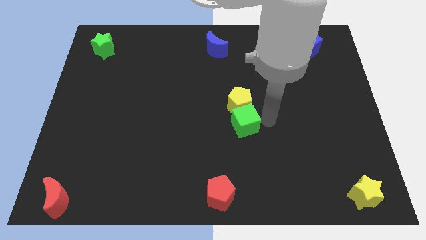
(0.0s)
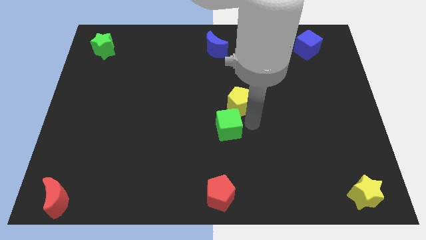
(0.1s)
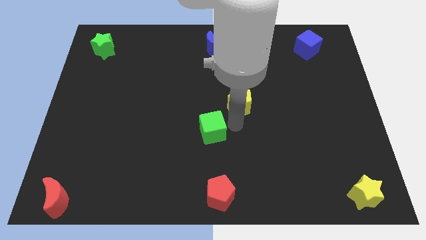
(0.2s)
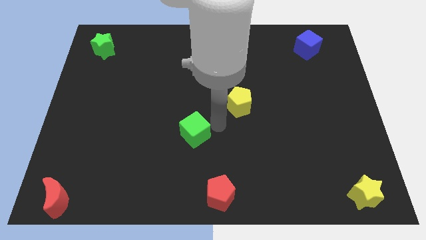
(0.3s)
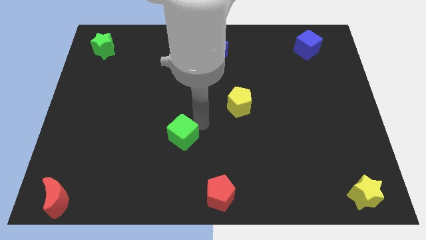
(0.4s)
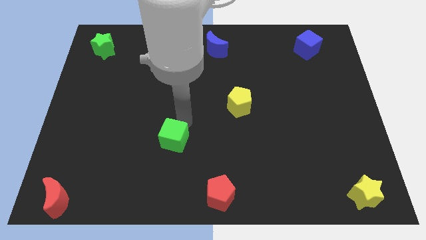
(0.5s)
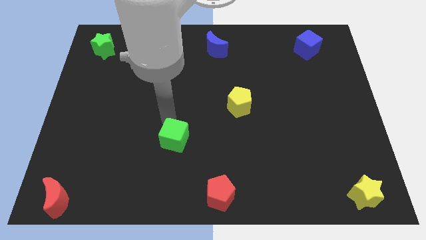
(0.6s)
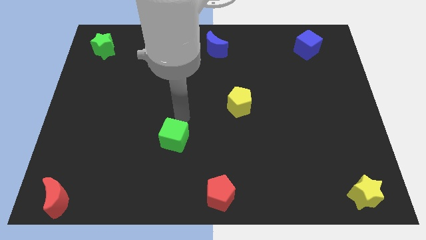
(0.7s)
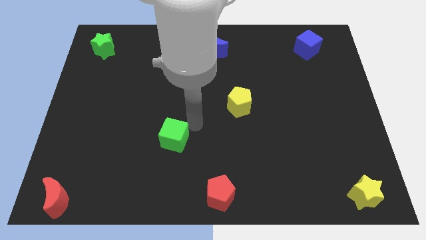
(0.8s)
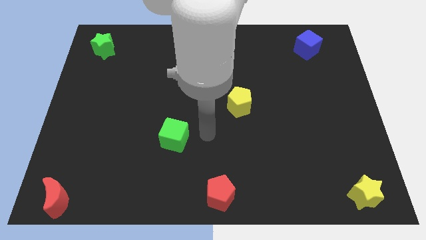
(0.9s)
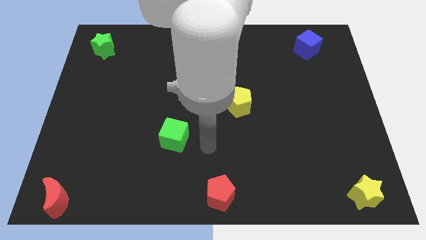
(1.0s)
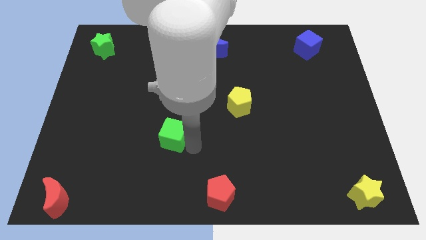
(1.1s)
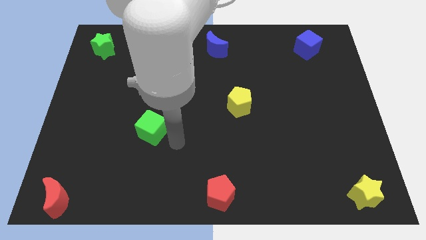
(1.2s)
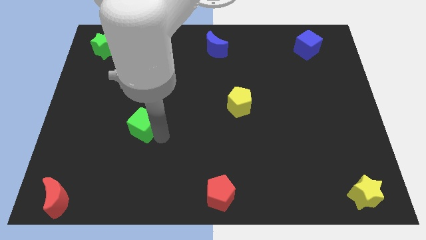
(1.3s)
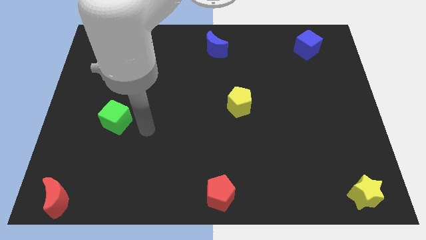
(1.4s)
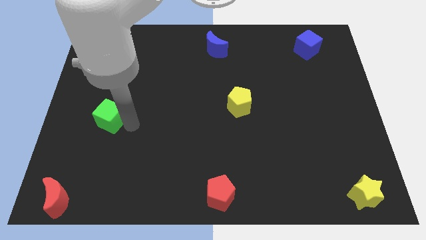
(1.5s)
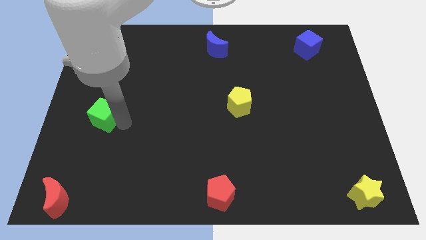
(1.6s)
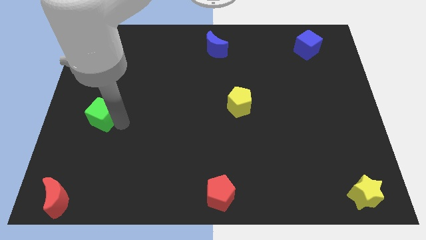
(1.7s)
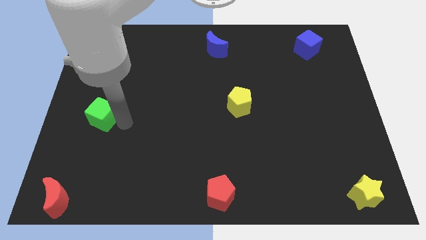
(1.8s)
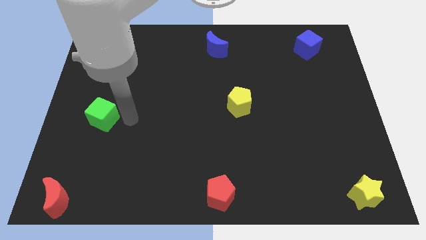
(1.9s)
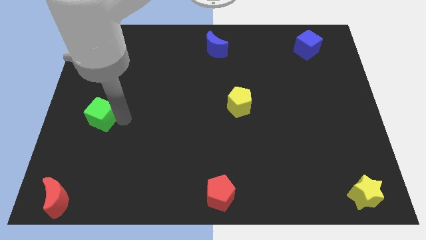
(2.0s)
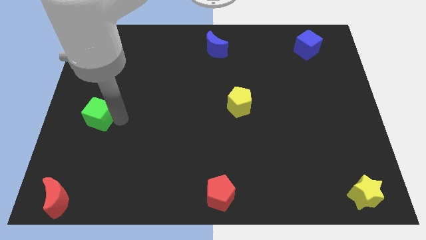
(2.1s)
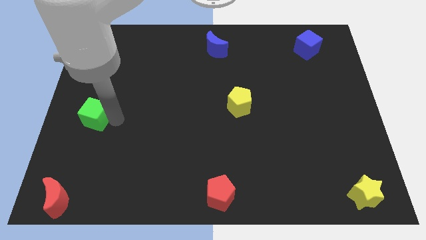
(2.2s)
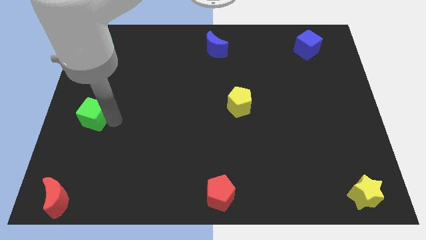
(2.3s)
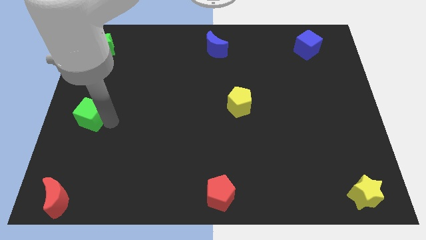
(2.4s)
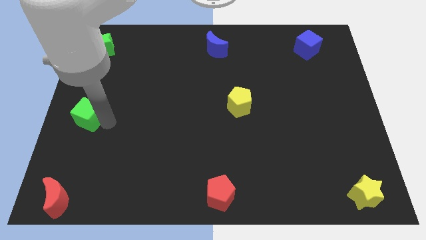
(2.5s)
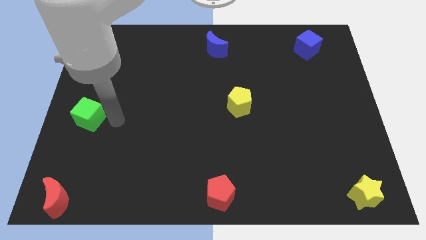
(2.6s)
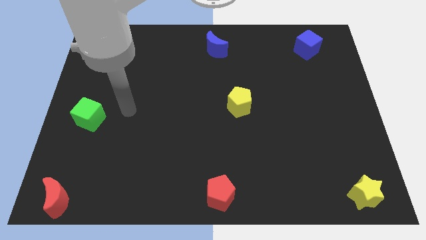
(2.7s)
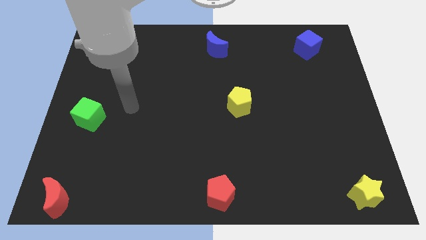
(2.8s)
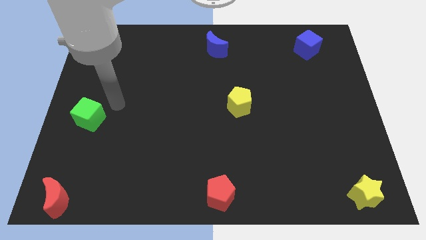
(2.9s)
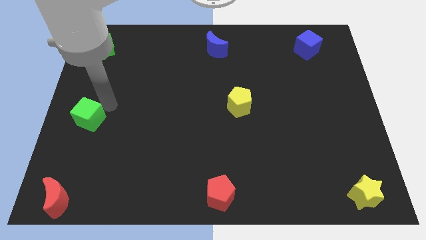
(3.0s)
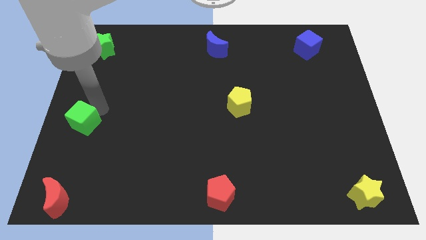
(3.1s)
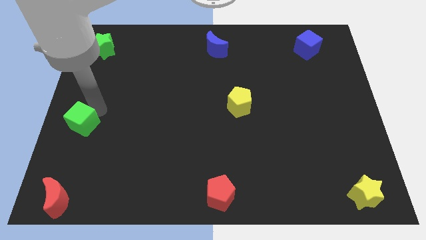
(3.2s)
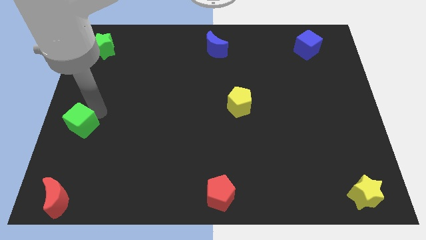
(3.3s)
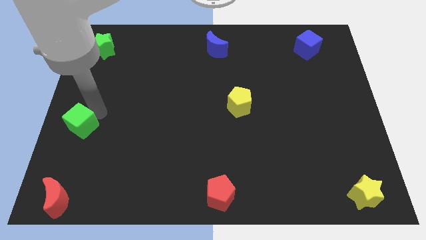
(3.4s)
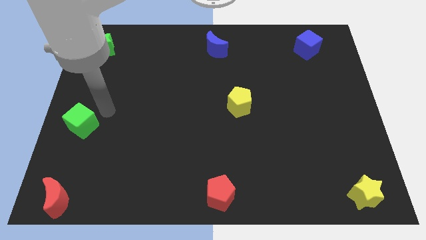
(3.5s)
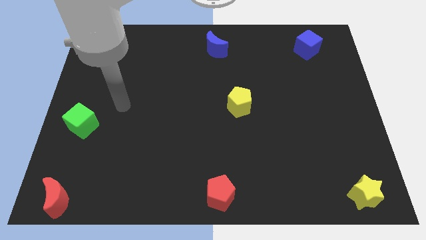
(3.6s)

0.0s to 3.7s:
move the green cube to the middle left

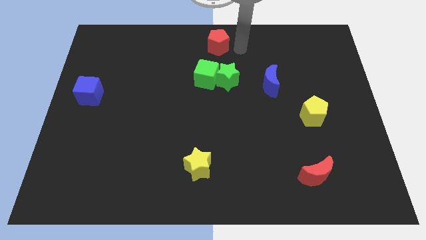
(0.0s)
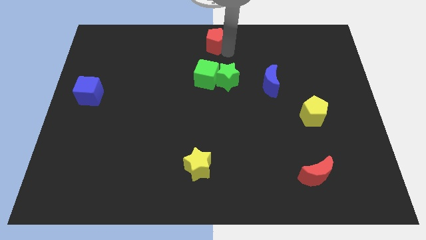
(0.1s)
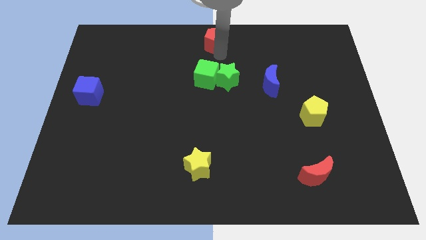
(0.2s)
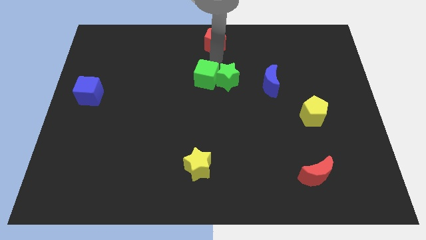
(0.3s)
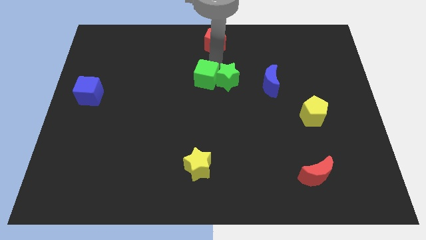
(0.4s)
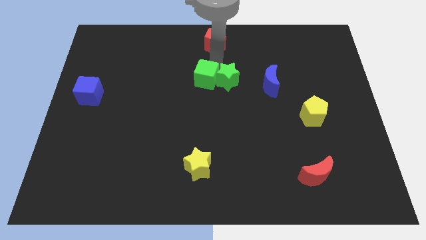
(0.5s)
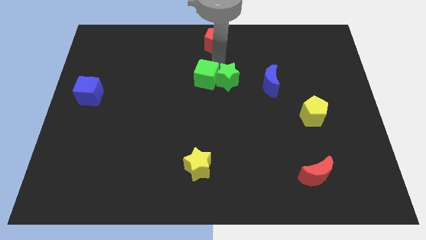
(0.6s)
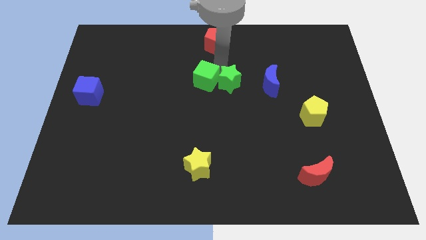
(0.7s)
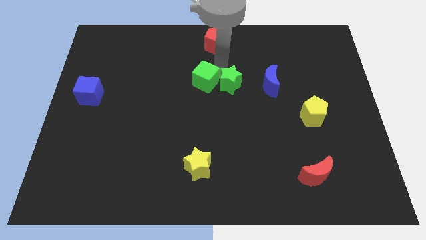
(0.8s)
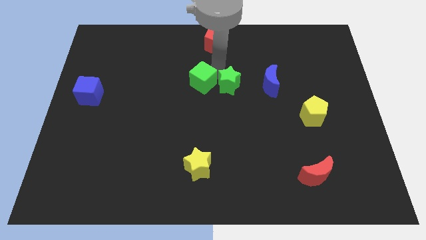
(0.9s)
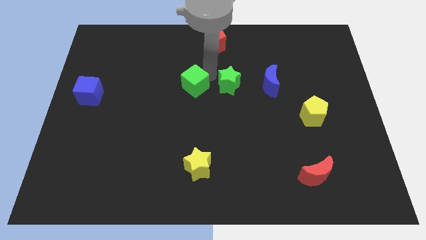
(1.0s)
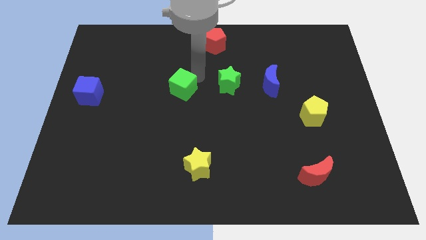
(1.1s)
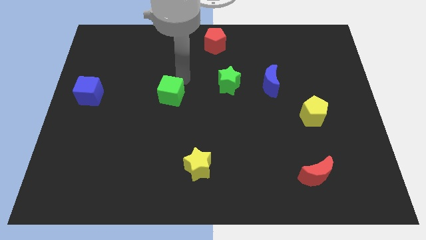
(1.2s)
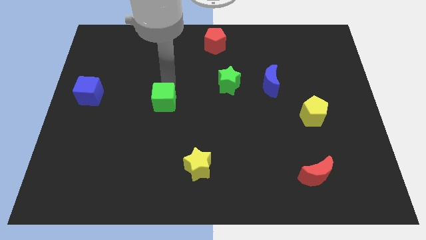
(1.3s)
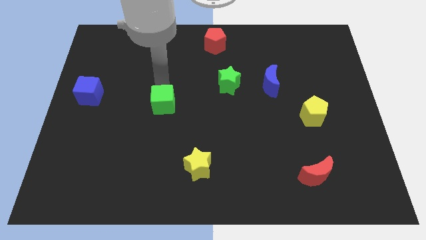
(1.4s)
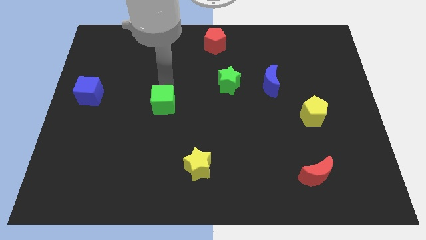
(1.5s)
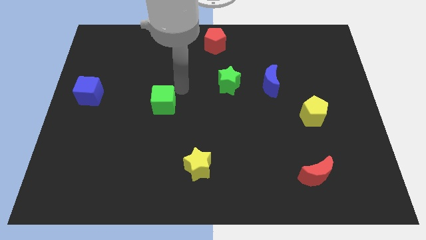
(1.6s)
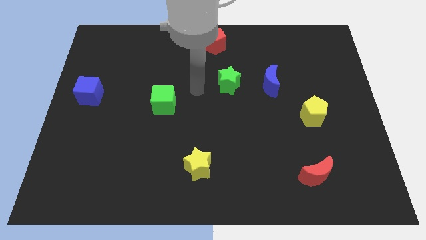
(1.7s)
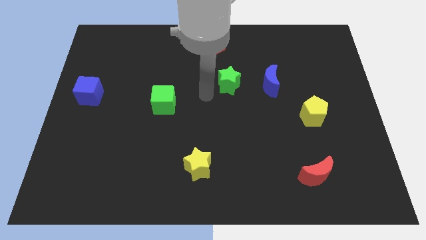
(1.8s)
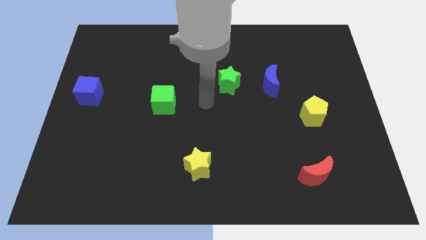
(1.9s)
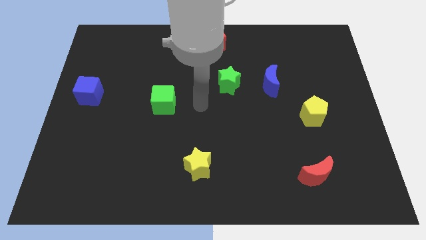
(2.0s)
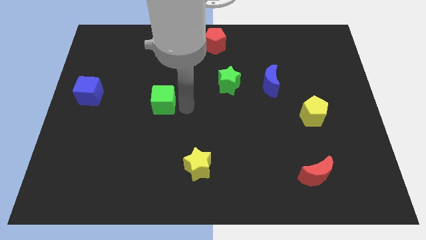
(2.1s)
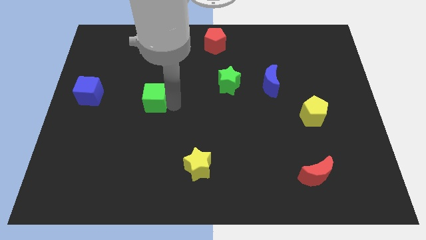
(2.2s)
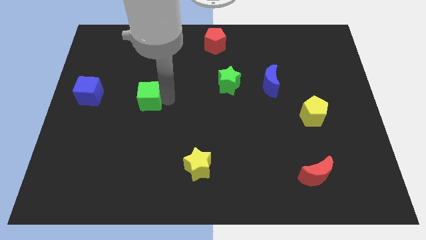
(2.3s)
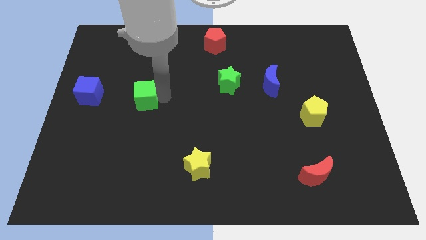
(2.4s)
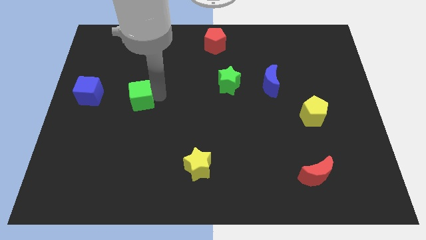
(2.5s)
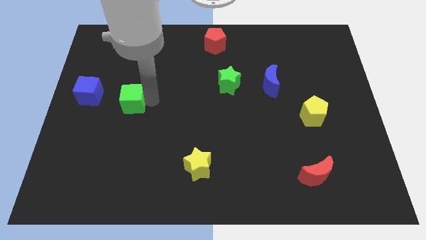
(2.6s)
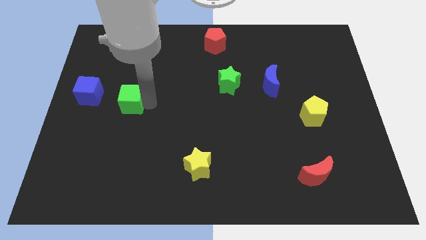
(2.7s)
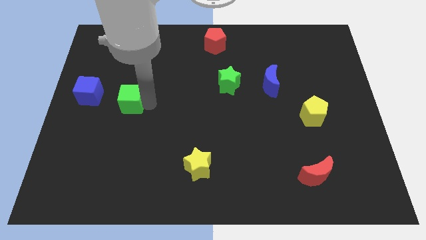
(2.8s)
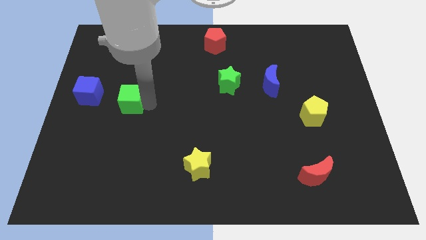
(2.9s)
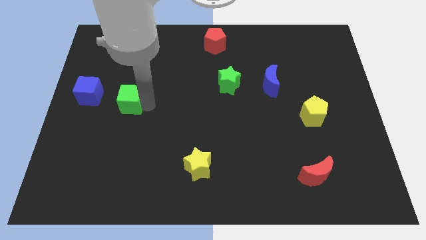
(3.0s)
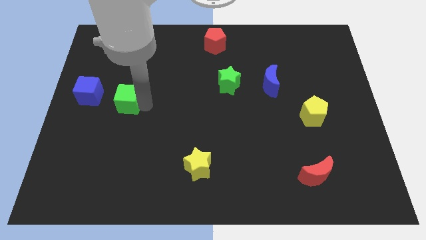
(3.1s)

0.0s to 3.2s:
move green cube to the right side of blue cube

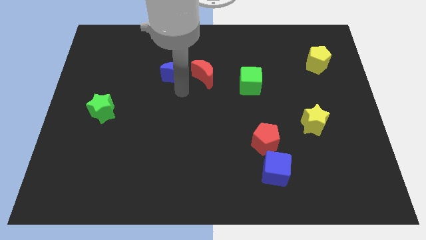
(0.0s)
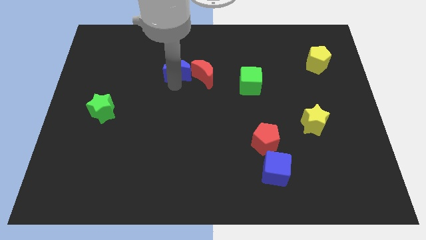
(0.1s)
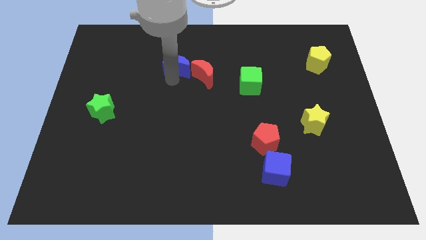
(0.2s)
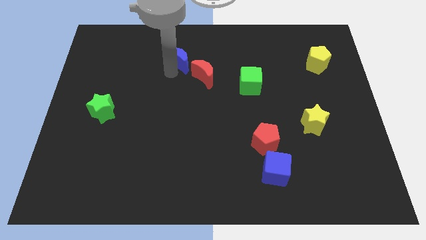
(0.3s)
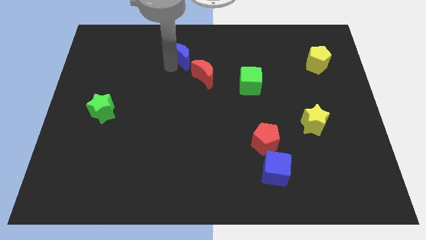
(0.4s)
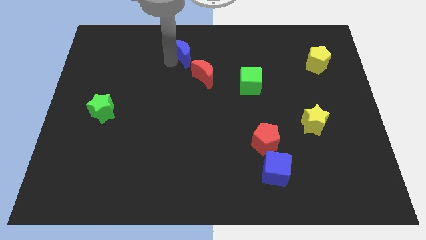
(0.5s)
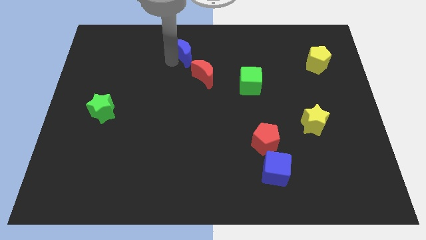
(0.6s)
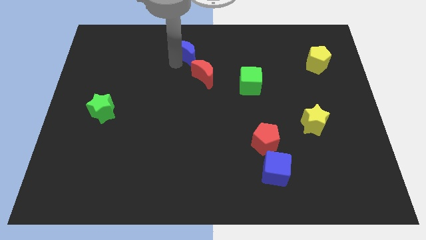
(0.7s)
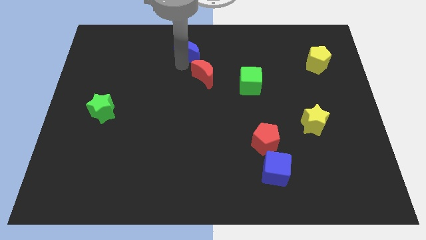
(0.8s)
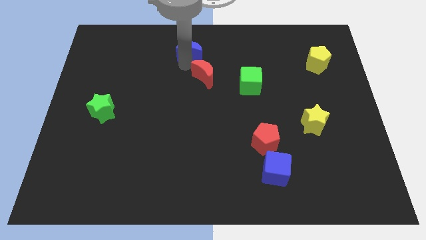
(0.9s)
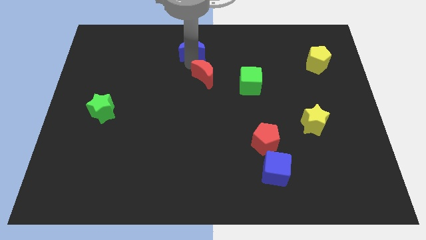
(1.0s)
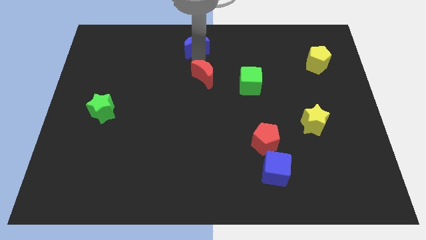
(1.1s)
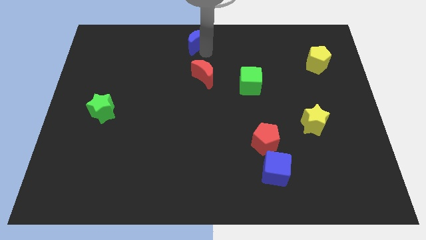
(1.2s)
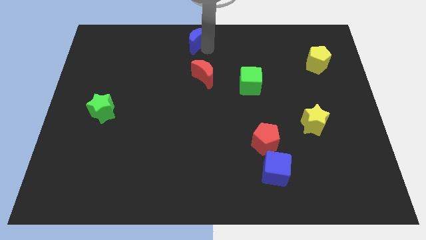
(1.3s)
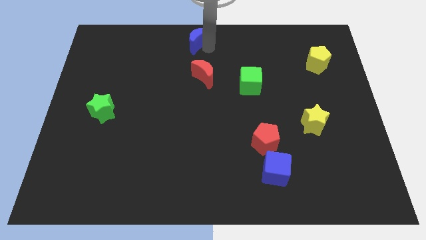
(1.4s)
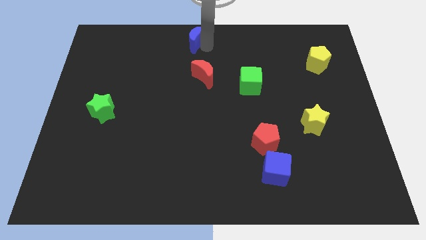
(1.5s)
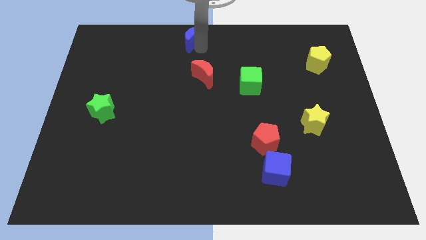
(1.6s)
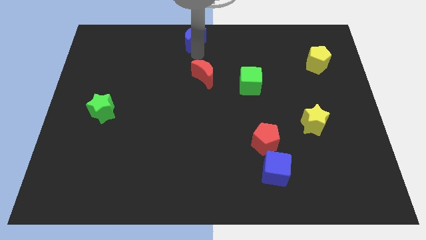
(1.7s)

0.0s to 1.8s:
push the blue moon towards the top center

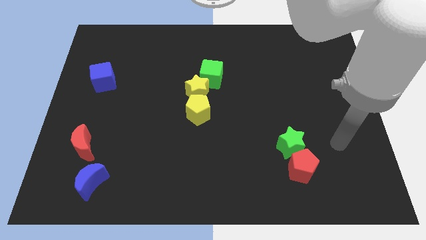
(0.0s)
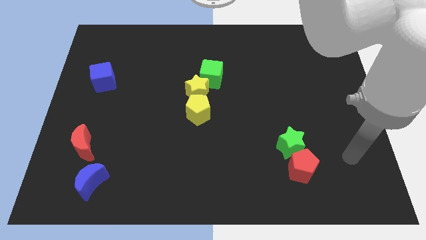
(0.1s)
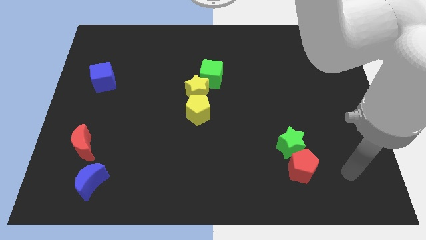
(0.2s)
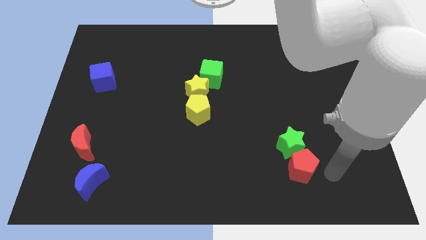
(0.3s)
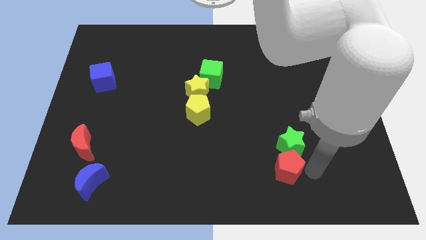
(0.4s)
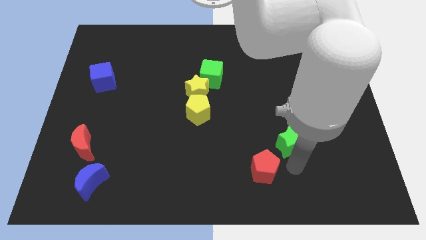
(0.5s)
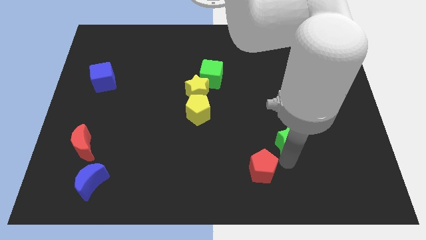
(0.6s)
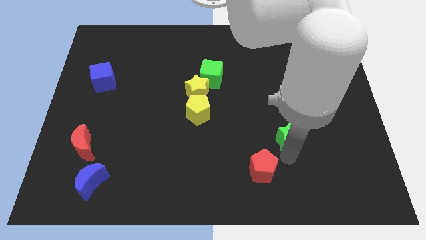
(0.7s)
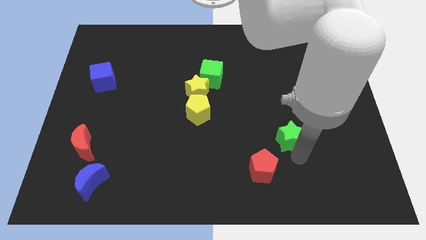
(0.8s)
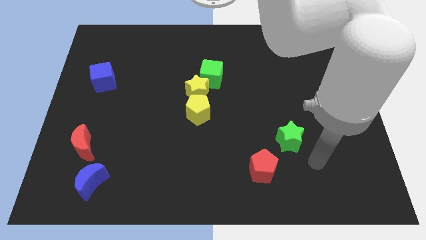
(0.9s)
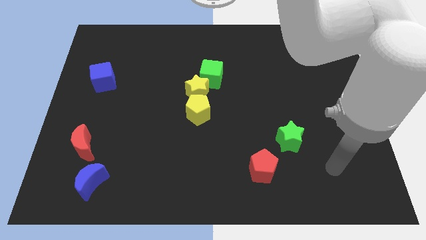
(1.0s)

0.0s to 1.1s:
separate the red pentagon from green star
